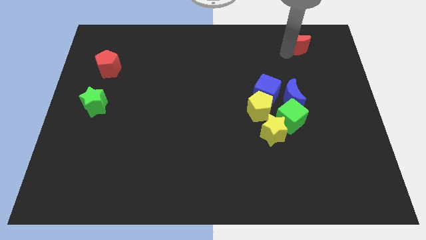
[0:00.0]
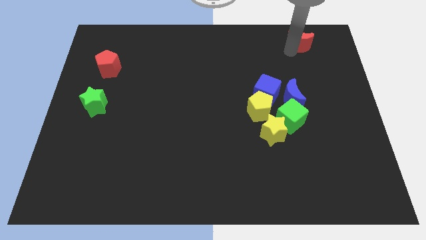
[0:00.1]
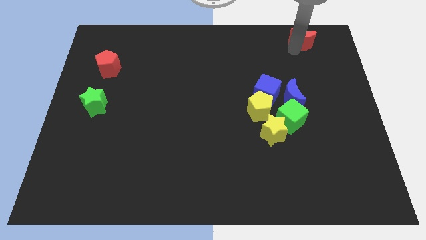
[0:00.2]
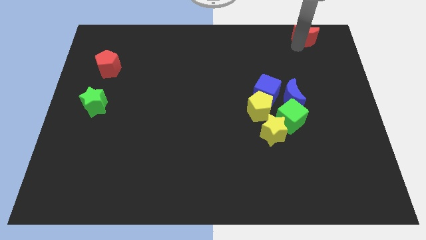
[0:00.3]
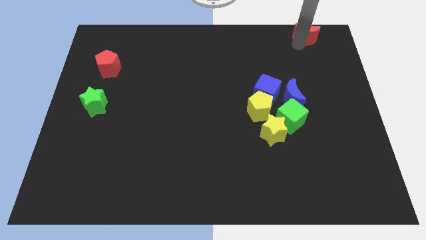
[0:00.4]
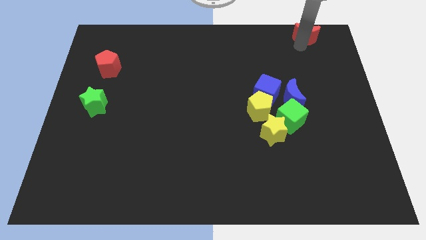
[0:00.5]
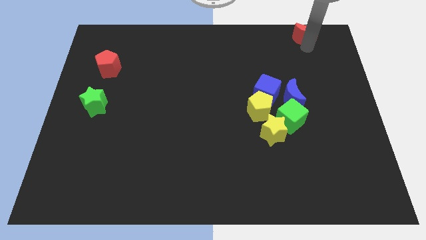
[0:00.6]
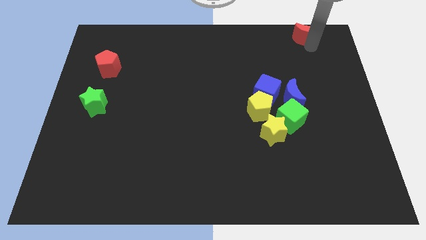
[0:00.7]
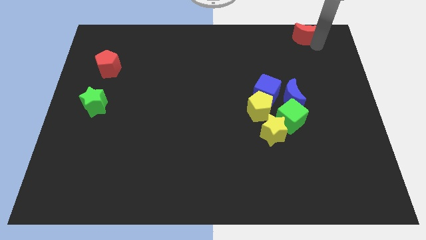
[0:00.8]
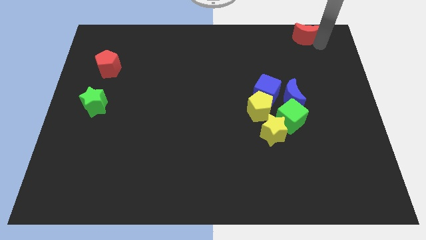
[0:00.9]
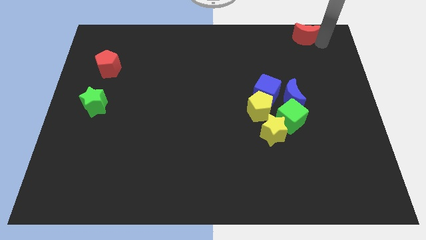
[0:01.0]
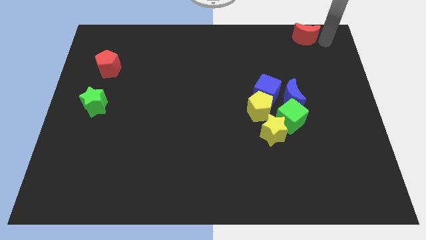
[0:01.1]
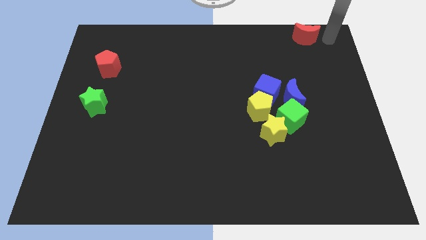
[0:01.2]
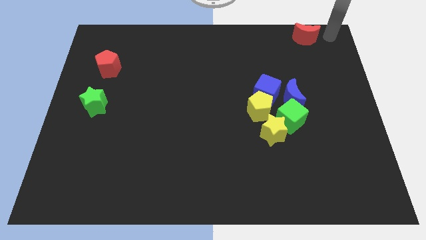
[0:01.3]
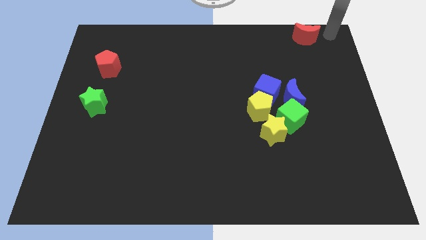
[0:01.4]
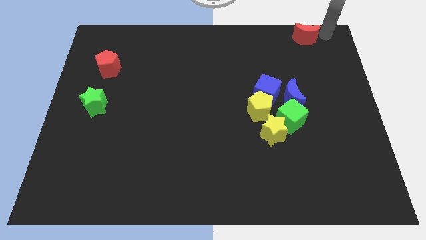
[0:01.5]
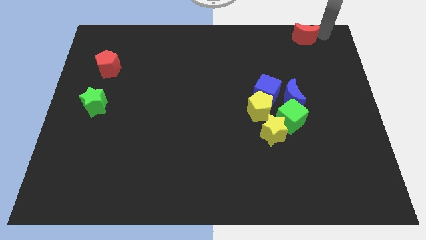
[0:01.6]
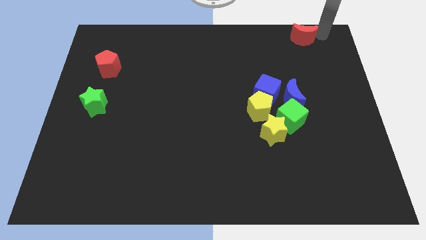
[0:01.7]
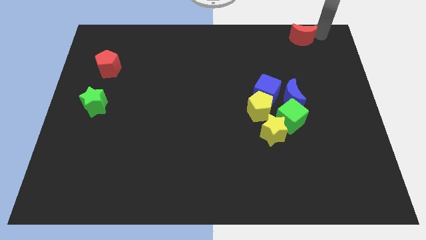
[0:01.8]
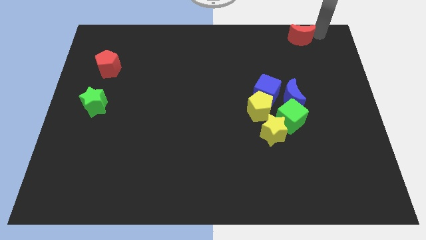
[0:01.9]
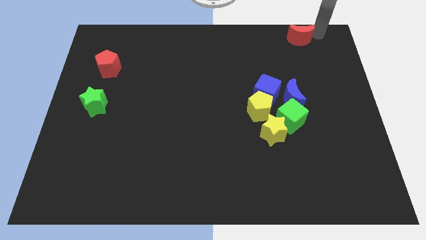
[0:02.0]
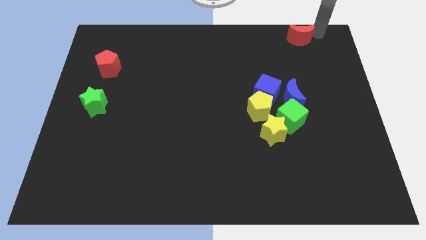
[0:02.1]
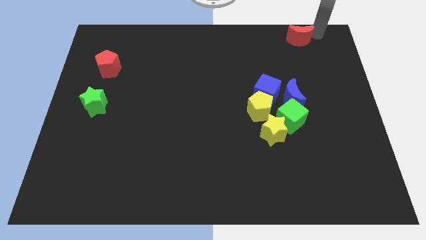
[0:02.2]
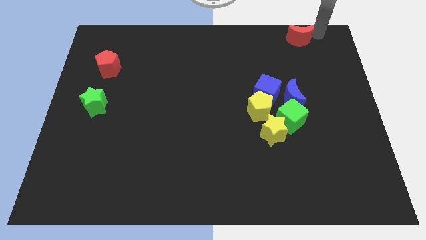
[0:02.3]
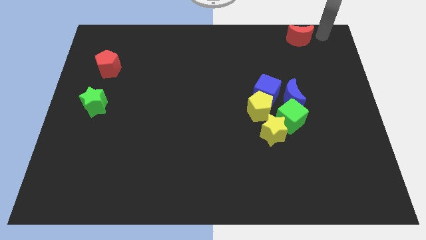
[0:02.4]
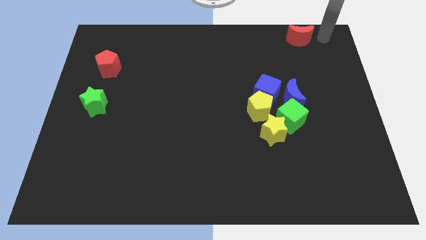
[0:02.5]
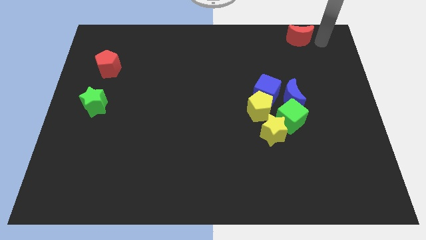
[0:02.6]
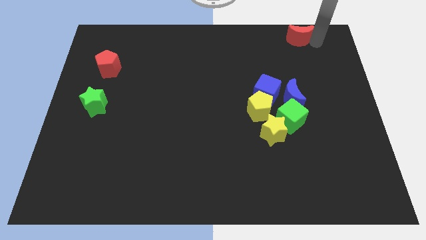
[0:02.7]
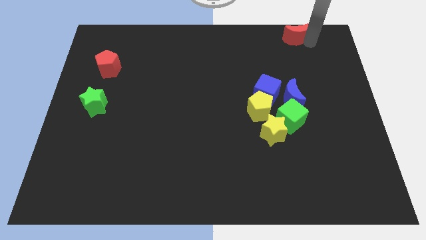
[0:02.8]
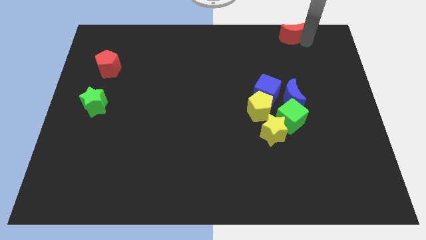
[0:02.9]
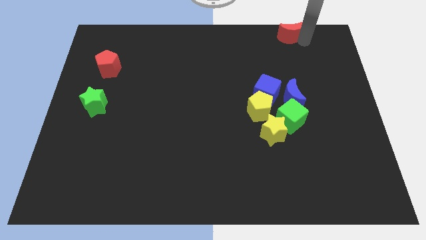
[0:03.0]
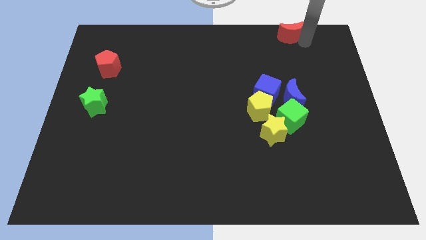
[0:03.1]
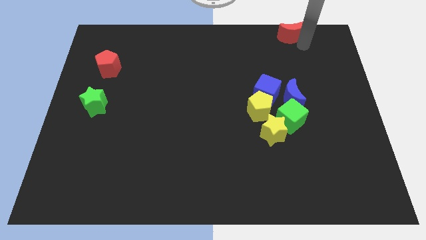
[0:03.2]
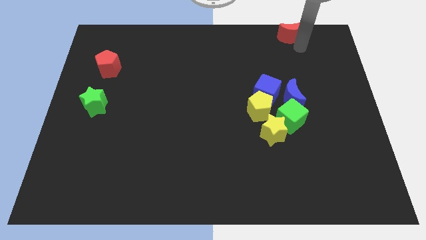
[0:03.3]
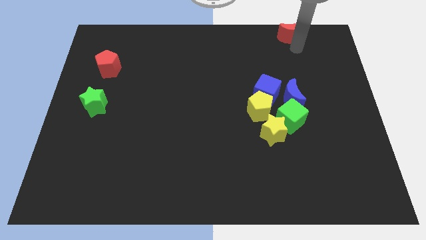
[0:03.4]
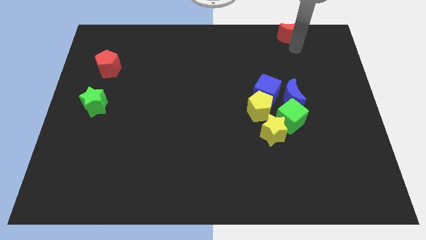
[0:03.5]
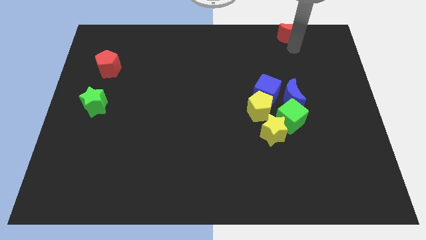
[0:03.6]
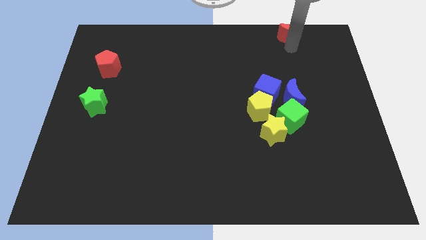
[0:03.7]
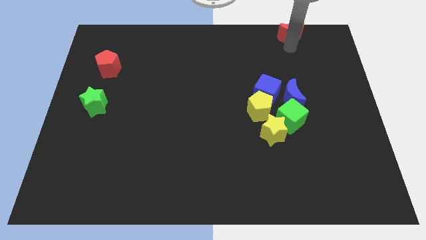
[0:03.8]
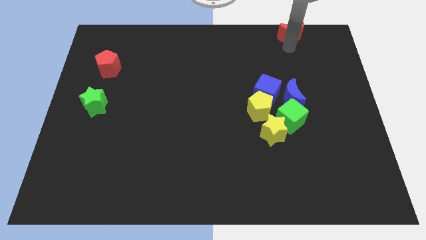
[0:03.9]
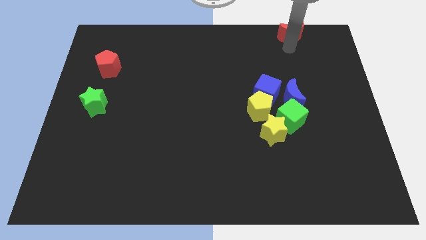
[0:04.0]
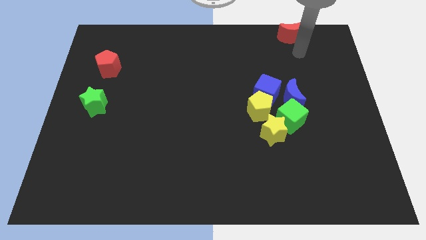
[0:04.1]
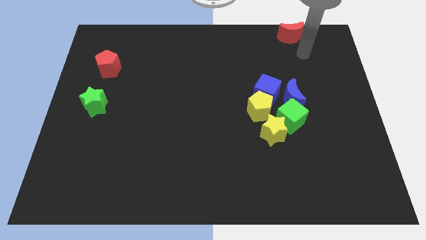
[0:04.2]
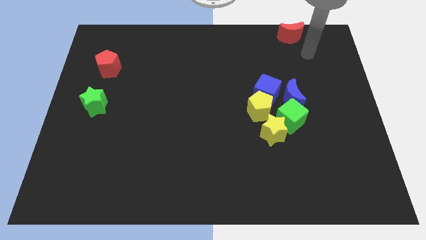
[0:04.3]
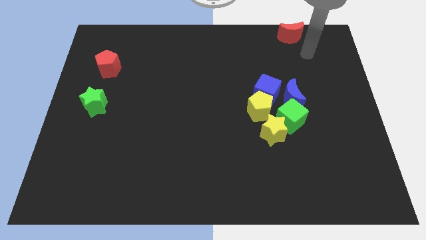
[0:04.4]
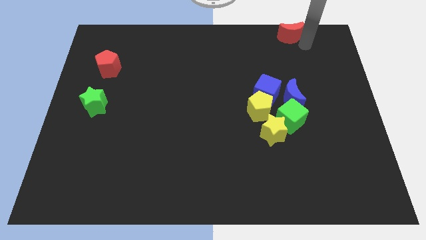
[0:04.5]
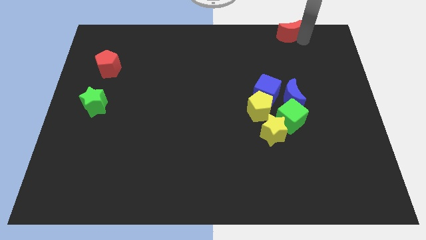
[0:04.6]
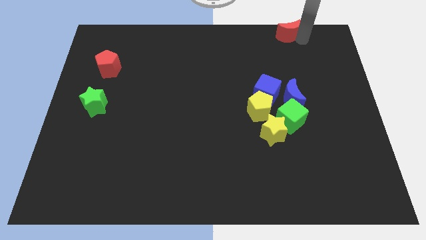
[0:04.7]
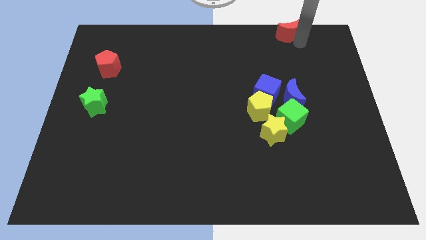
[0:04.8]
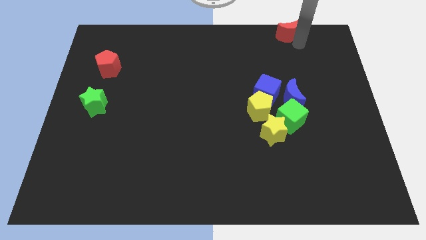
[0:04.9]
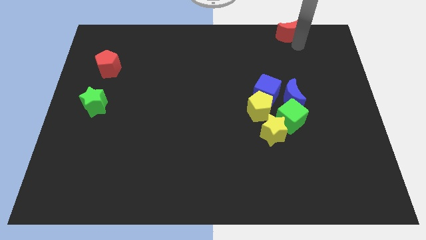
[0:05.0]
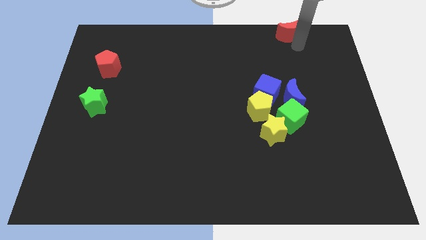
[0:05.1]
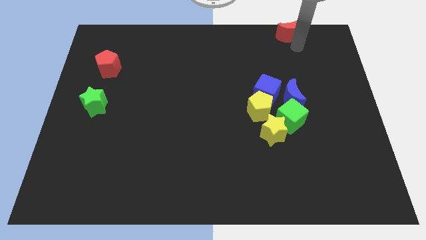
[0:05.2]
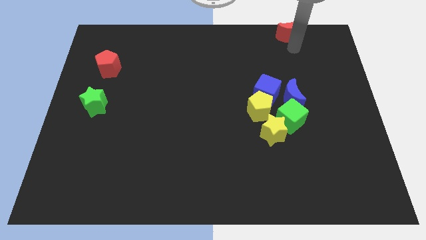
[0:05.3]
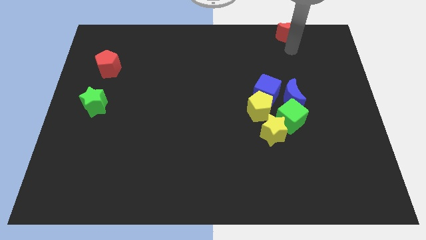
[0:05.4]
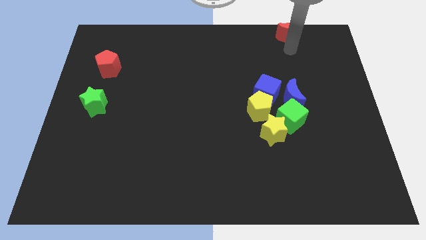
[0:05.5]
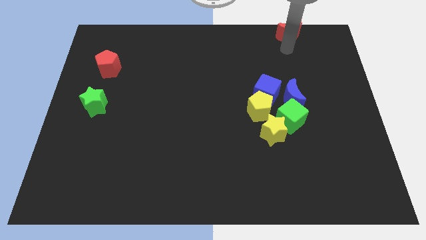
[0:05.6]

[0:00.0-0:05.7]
push the red crescent to the top right

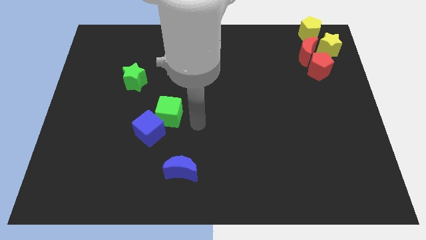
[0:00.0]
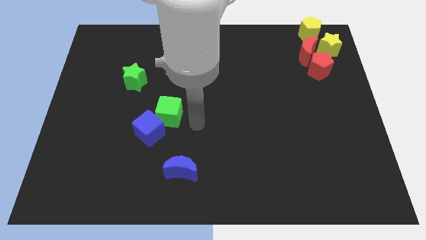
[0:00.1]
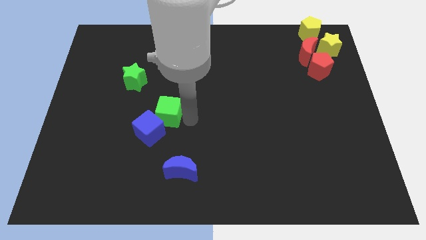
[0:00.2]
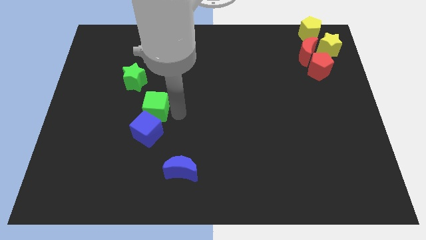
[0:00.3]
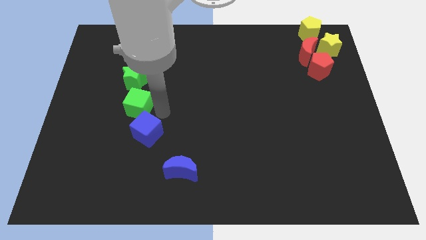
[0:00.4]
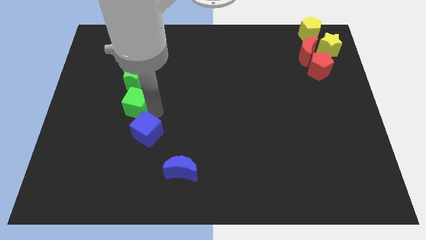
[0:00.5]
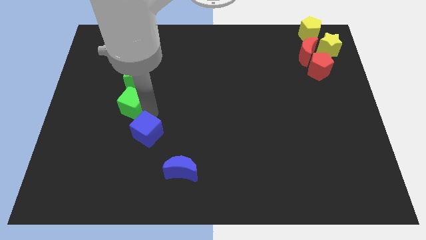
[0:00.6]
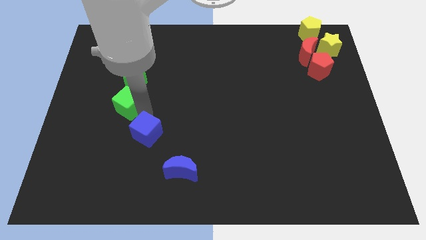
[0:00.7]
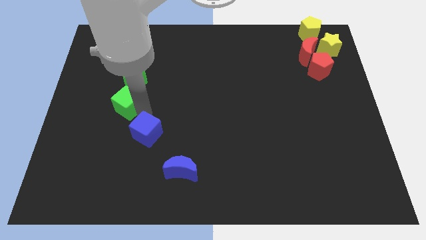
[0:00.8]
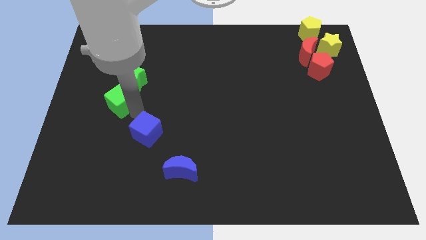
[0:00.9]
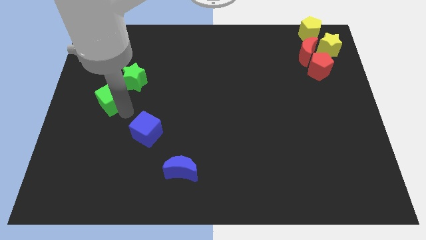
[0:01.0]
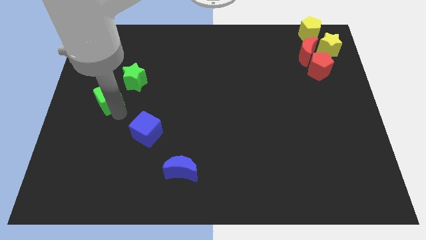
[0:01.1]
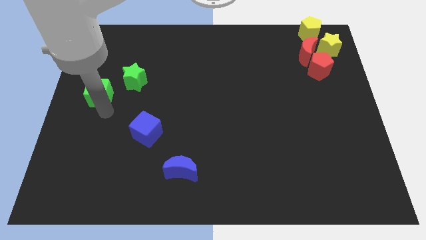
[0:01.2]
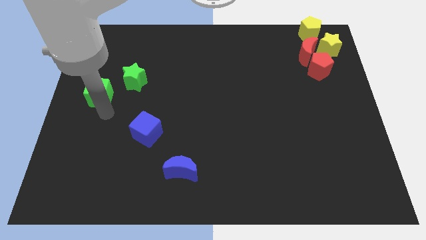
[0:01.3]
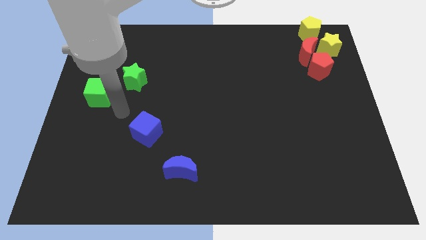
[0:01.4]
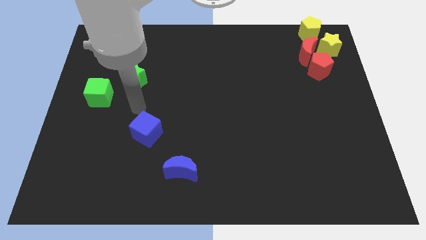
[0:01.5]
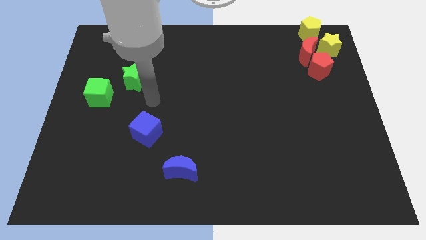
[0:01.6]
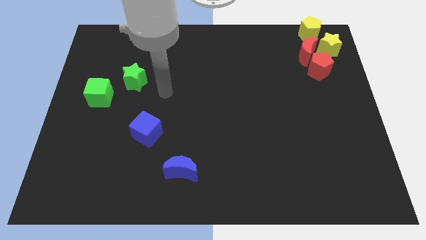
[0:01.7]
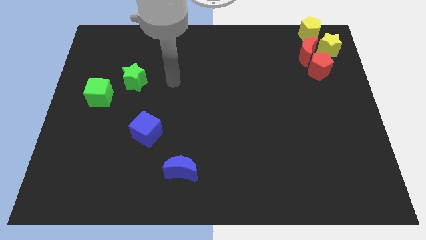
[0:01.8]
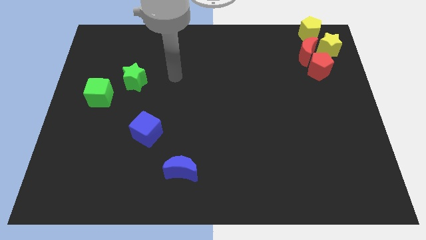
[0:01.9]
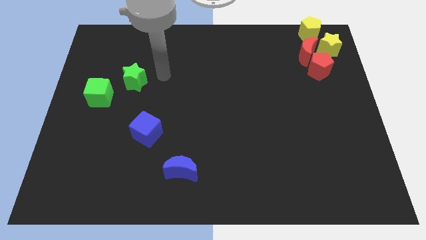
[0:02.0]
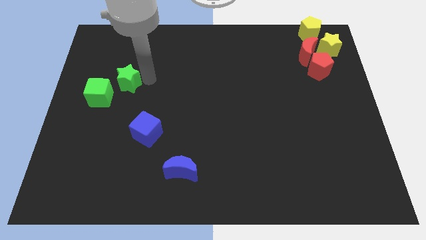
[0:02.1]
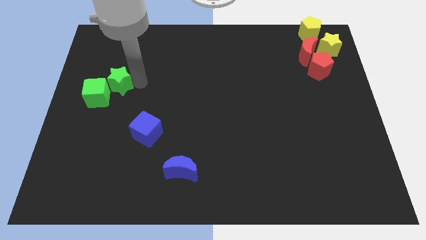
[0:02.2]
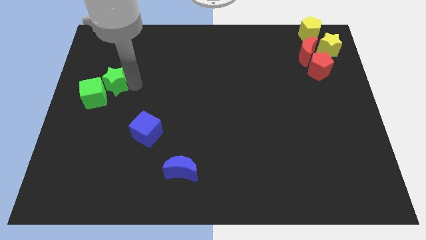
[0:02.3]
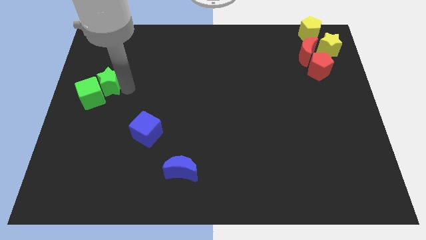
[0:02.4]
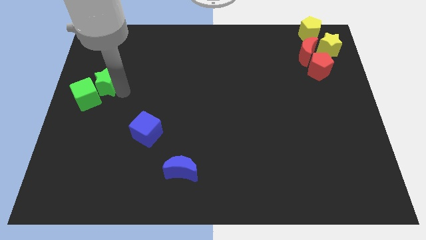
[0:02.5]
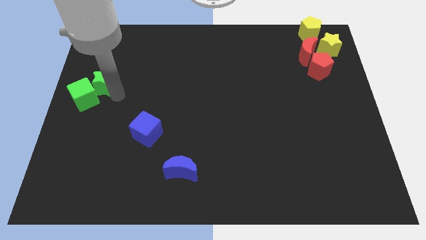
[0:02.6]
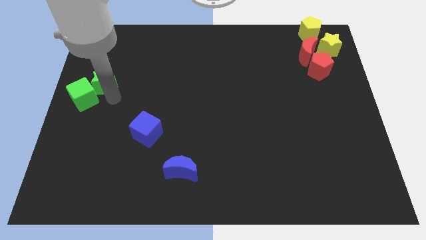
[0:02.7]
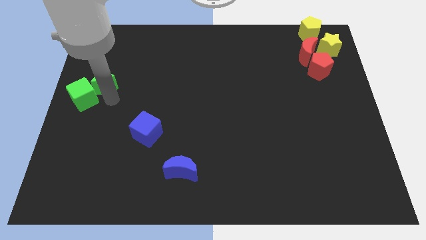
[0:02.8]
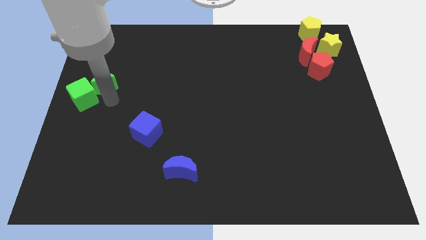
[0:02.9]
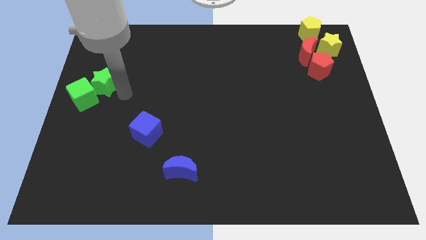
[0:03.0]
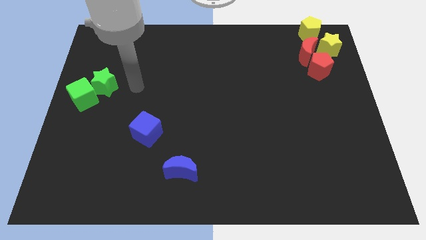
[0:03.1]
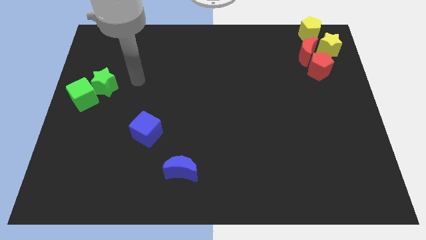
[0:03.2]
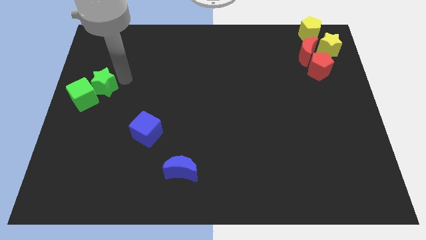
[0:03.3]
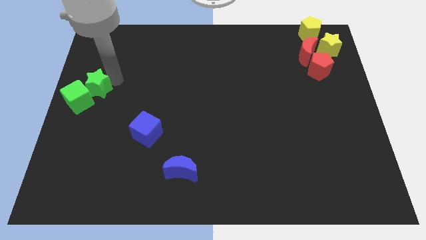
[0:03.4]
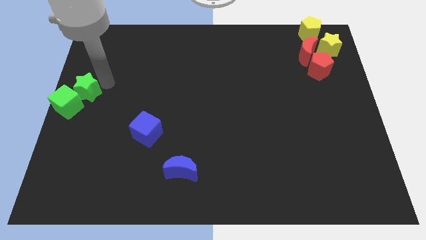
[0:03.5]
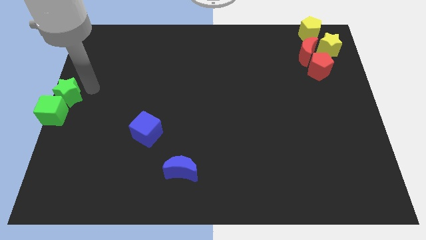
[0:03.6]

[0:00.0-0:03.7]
push the green cube and green star to the left center of the board
